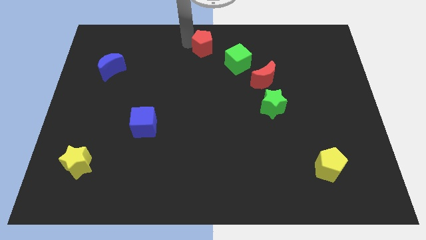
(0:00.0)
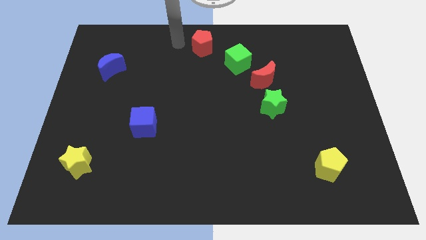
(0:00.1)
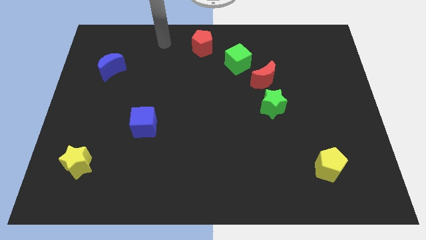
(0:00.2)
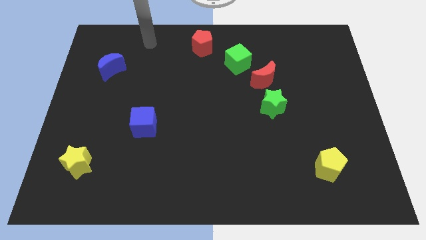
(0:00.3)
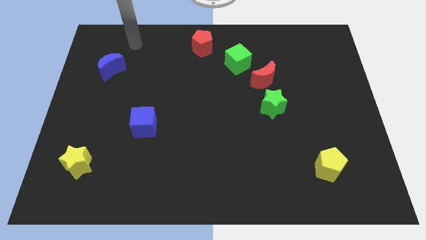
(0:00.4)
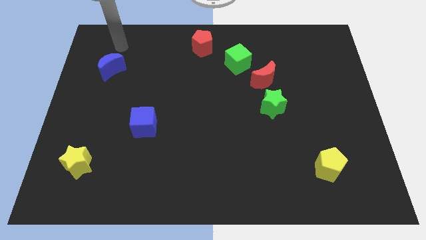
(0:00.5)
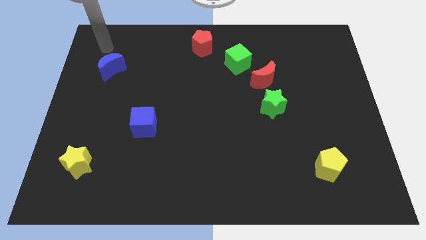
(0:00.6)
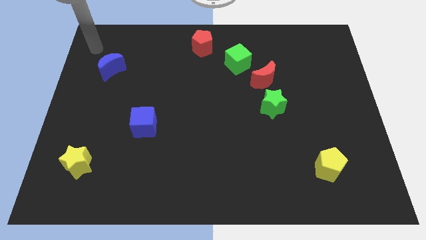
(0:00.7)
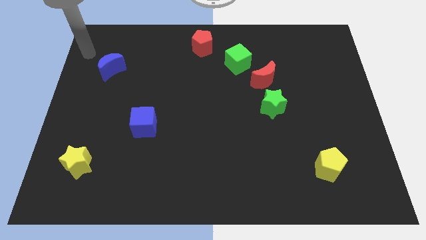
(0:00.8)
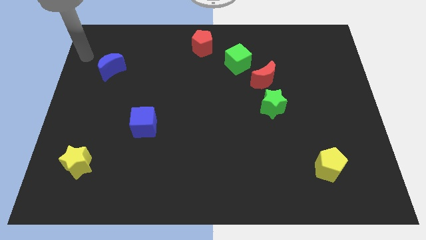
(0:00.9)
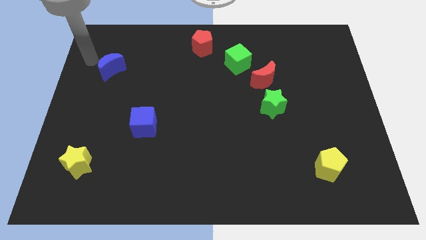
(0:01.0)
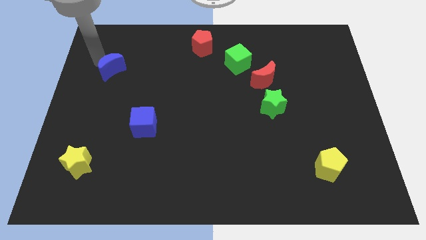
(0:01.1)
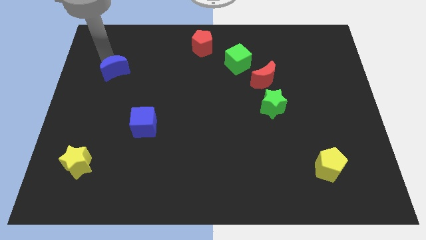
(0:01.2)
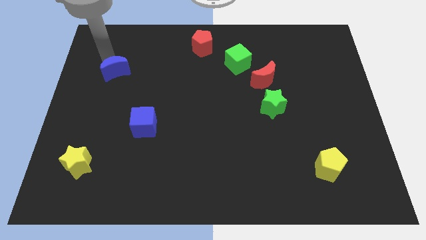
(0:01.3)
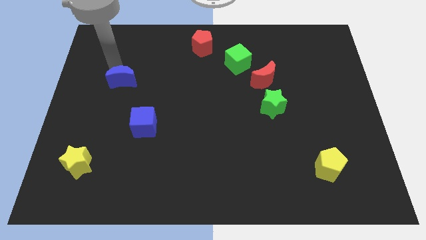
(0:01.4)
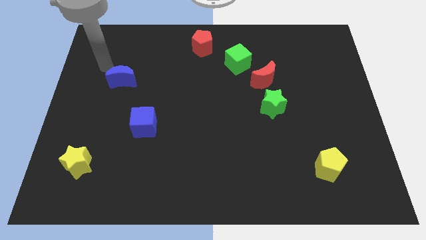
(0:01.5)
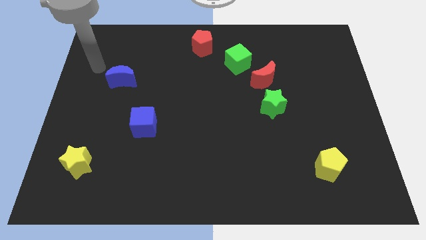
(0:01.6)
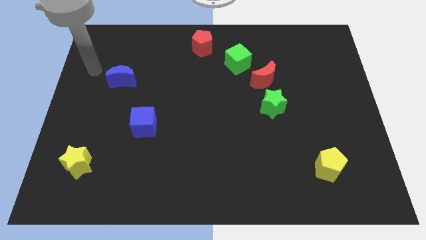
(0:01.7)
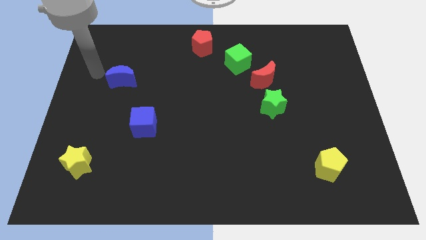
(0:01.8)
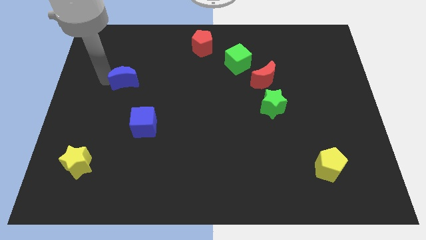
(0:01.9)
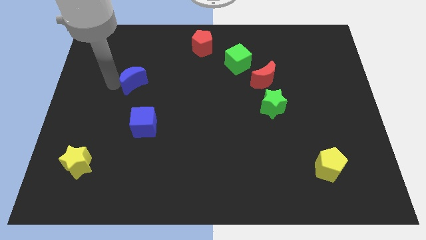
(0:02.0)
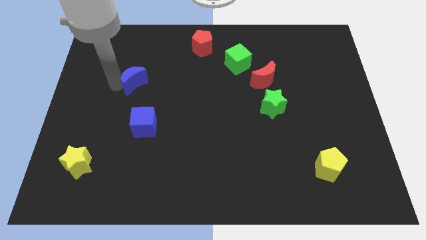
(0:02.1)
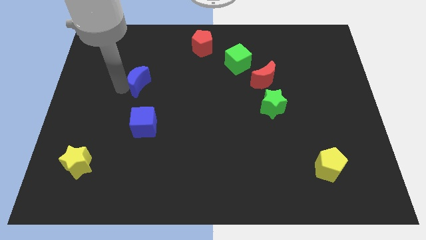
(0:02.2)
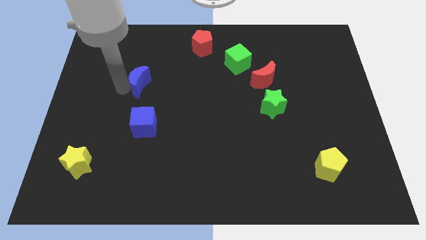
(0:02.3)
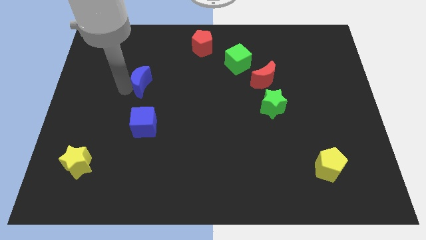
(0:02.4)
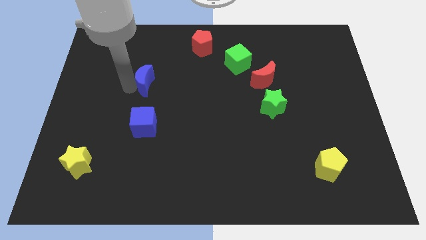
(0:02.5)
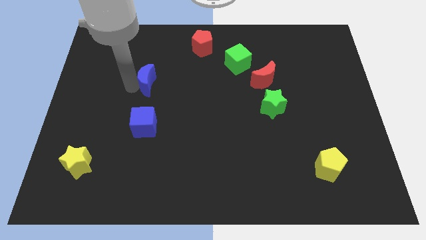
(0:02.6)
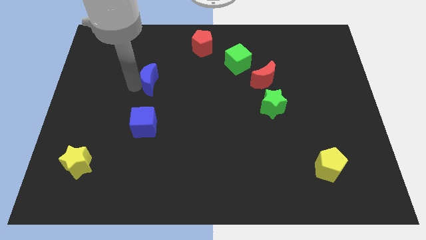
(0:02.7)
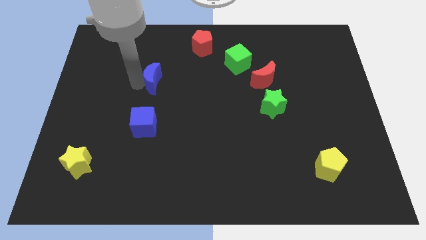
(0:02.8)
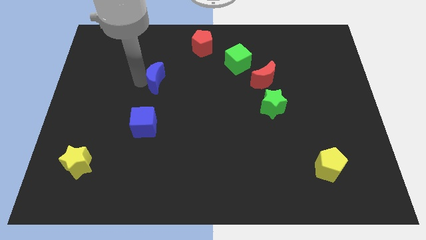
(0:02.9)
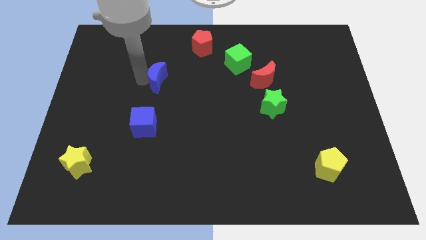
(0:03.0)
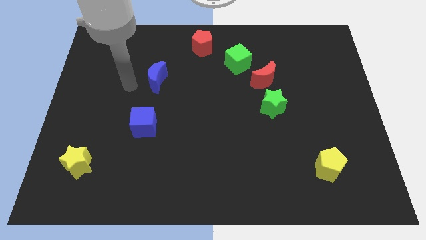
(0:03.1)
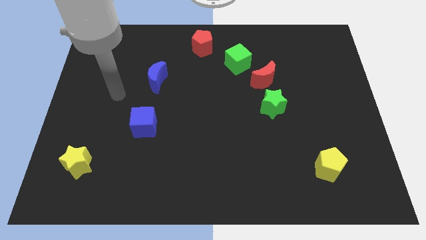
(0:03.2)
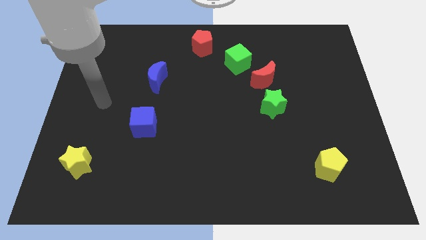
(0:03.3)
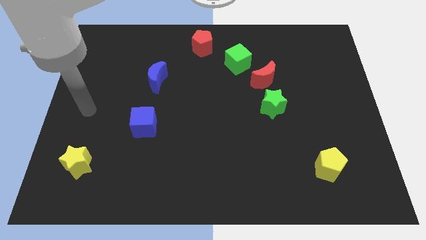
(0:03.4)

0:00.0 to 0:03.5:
move the blue crescent to the bottom left of the red pentagon

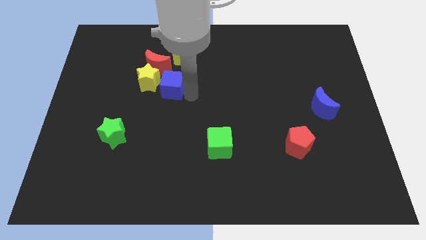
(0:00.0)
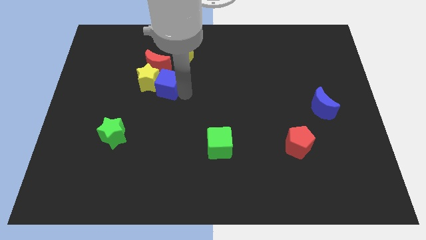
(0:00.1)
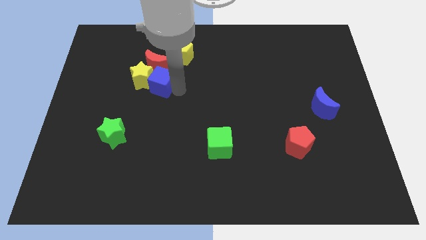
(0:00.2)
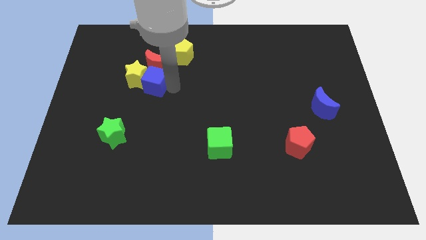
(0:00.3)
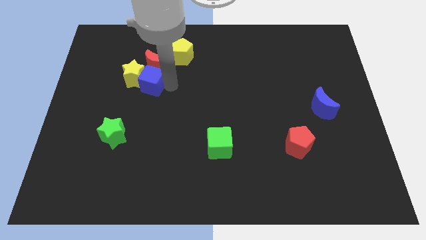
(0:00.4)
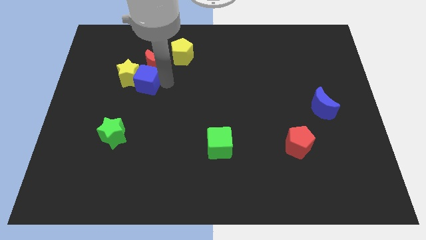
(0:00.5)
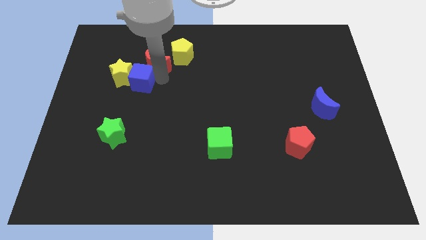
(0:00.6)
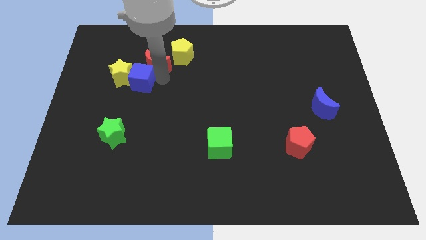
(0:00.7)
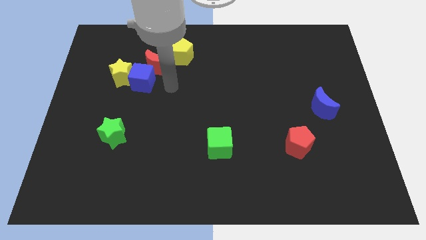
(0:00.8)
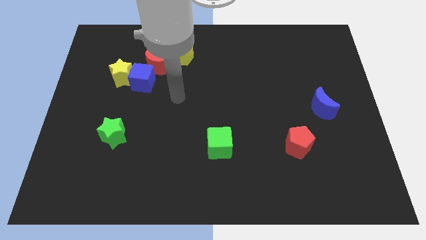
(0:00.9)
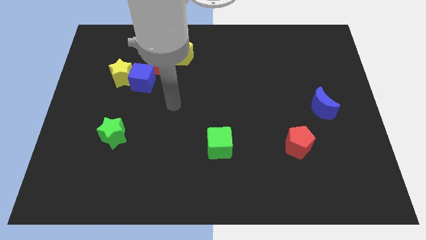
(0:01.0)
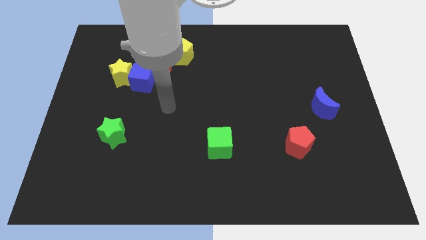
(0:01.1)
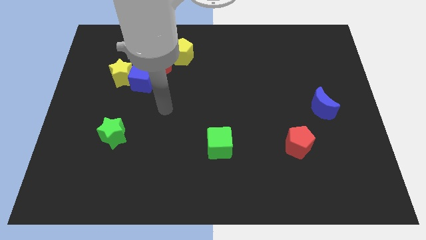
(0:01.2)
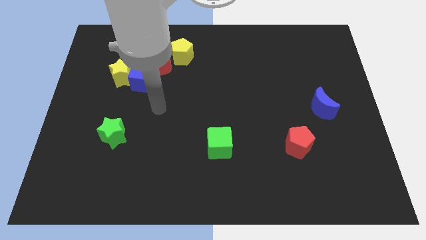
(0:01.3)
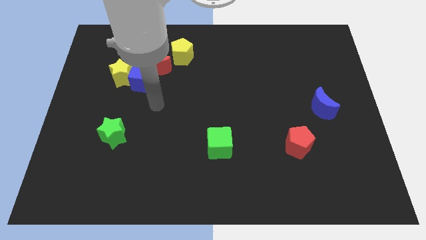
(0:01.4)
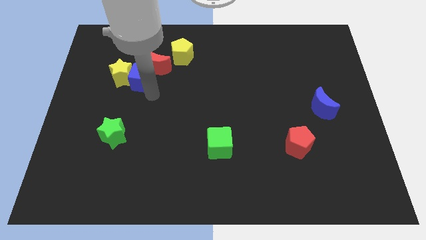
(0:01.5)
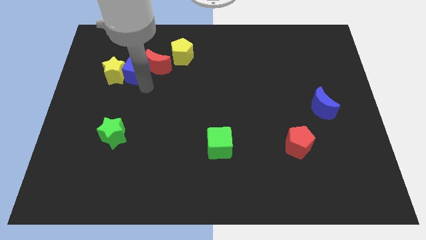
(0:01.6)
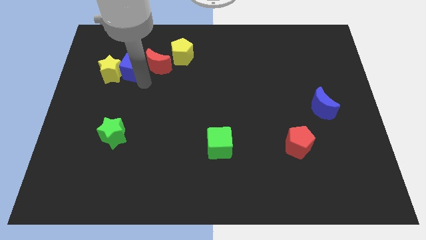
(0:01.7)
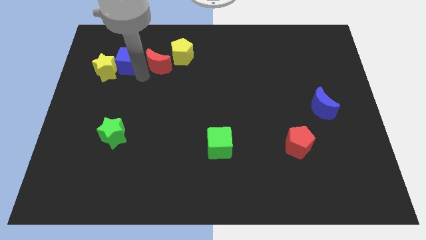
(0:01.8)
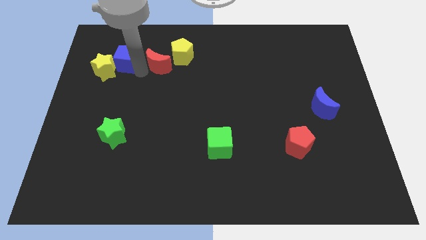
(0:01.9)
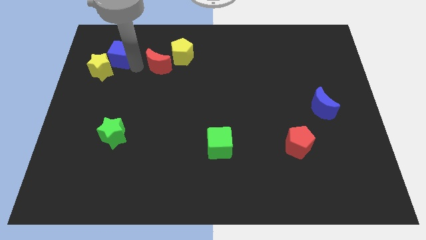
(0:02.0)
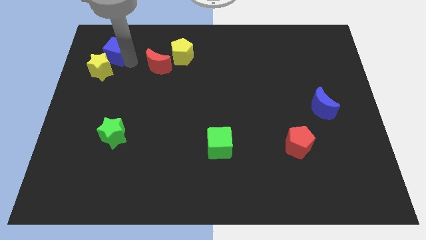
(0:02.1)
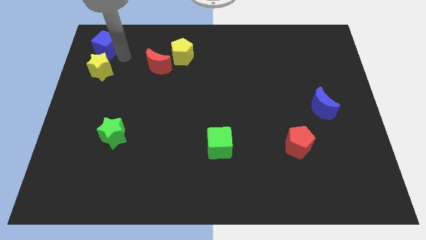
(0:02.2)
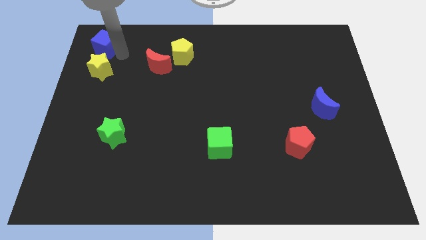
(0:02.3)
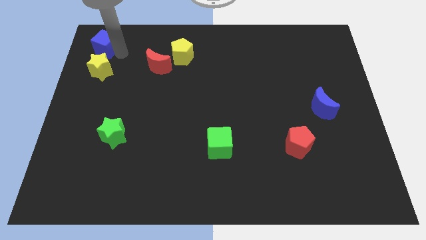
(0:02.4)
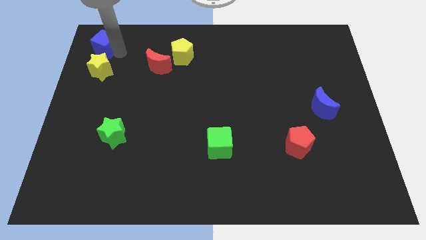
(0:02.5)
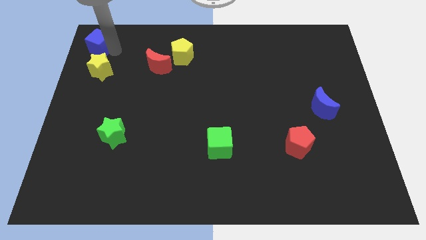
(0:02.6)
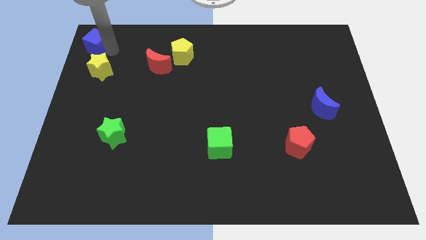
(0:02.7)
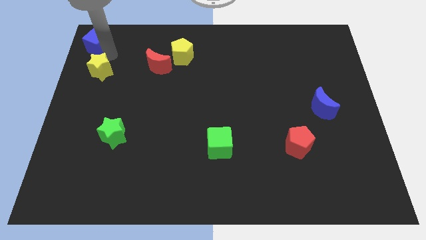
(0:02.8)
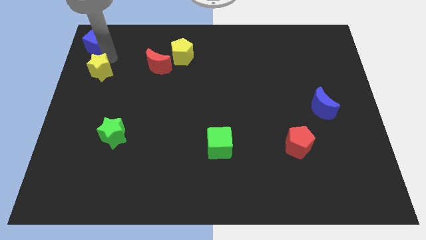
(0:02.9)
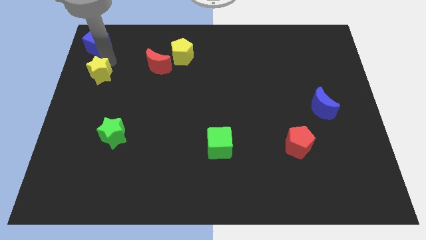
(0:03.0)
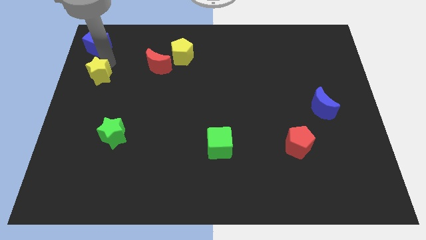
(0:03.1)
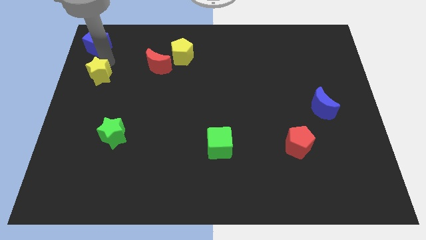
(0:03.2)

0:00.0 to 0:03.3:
slide the blue cube to the top left of the board

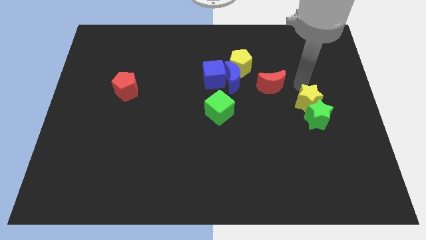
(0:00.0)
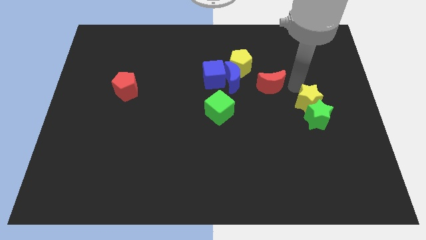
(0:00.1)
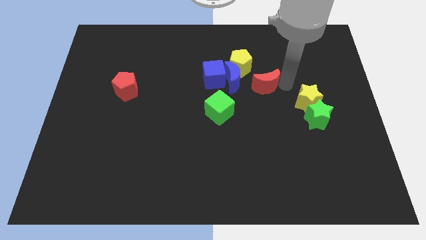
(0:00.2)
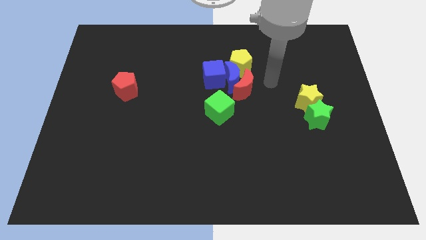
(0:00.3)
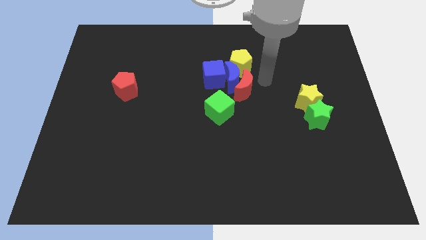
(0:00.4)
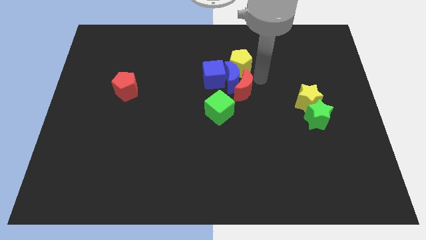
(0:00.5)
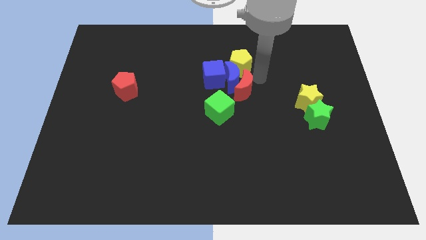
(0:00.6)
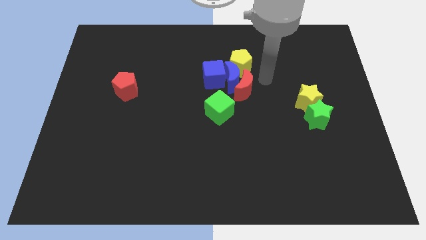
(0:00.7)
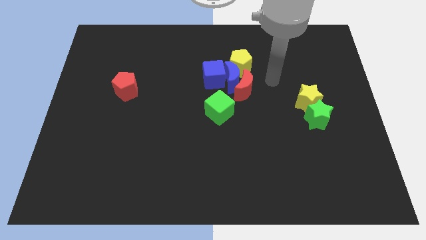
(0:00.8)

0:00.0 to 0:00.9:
push red moon into blue moon

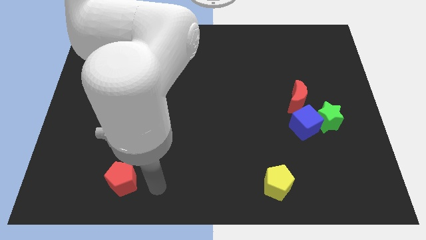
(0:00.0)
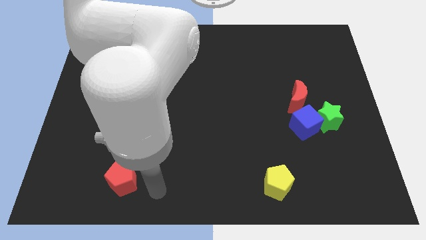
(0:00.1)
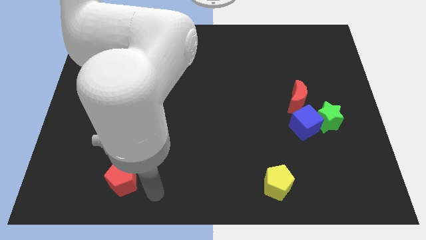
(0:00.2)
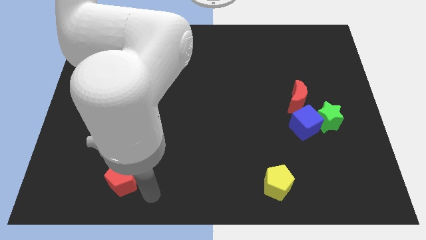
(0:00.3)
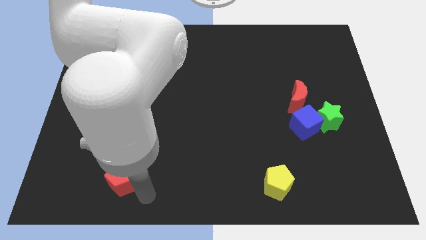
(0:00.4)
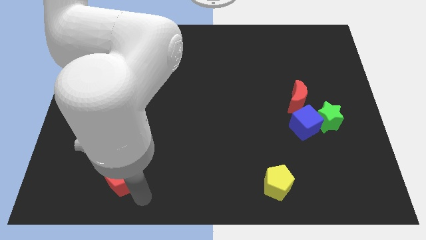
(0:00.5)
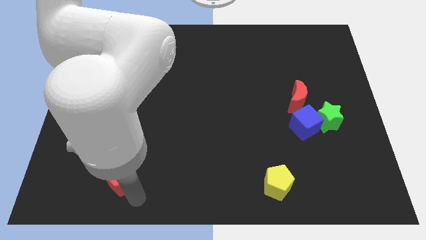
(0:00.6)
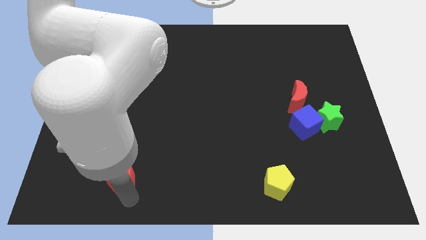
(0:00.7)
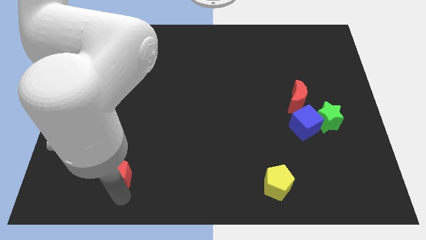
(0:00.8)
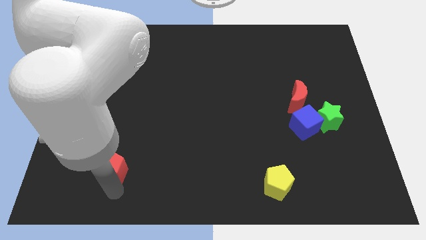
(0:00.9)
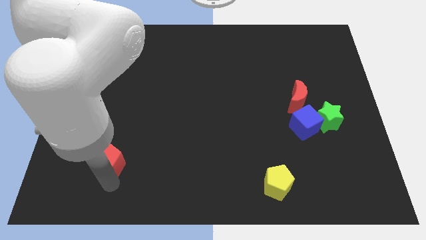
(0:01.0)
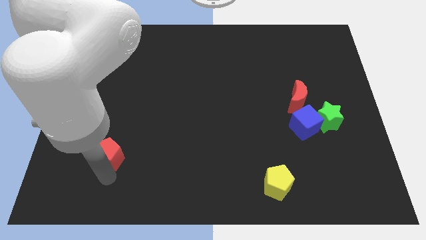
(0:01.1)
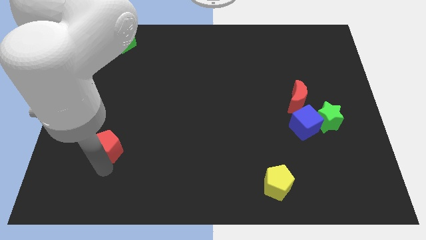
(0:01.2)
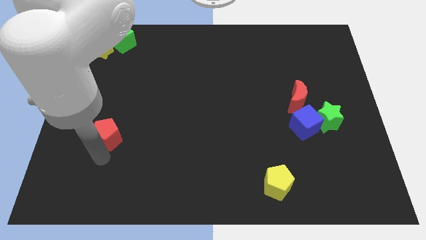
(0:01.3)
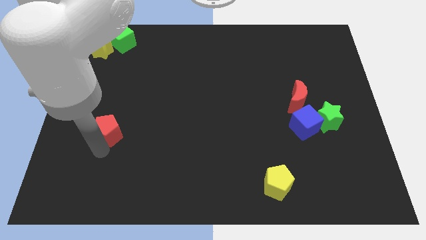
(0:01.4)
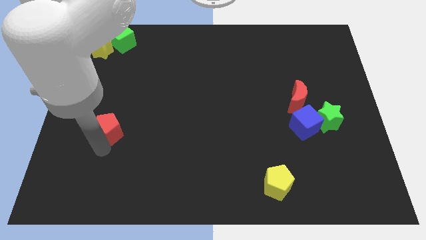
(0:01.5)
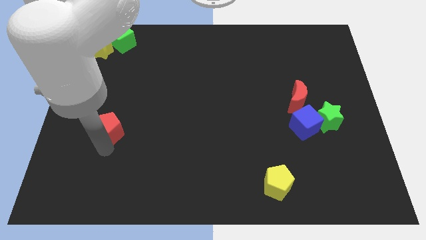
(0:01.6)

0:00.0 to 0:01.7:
move the red pentagon towards the top side of the board
